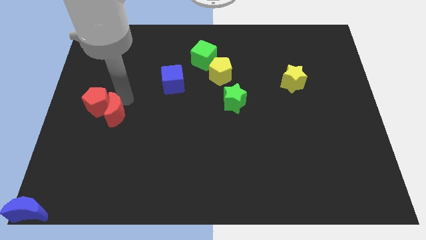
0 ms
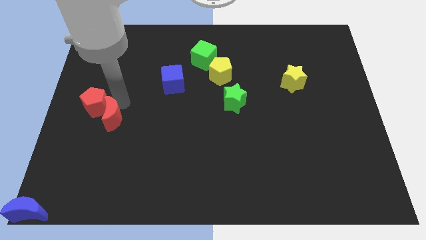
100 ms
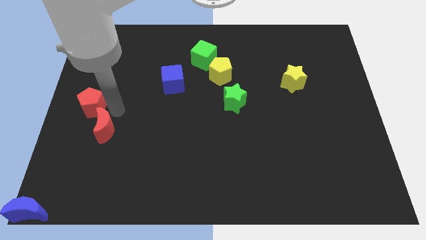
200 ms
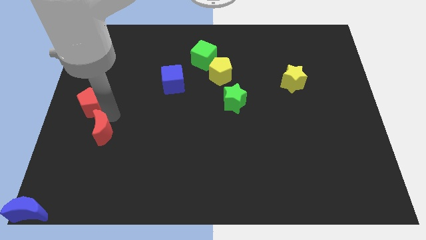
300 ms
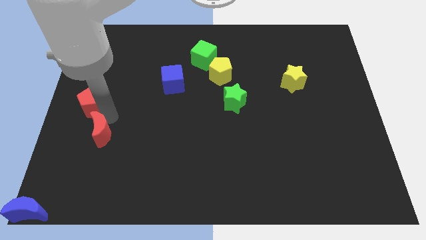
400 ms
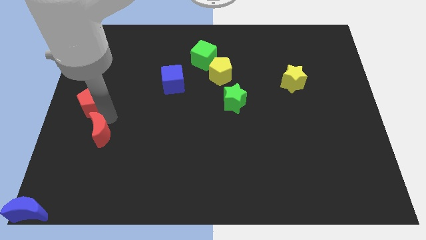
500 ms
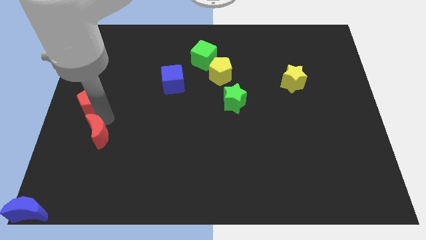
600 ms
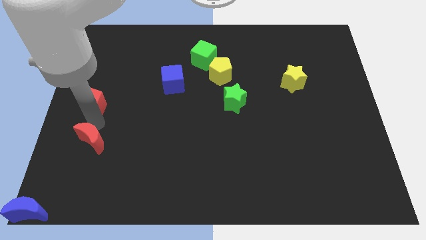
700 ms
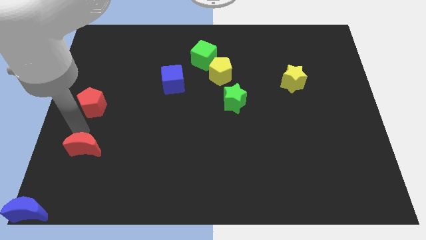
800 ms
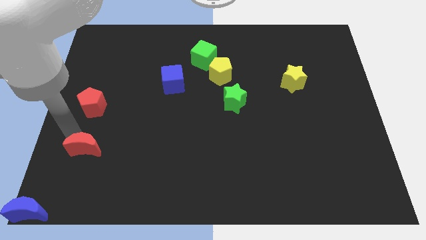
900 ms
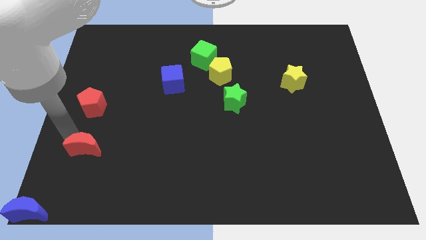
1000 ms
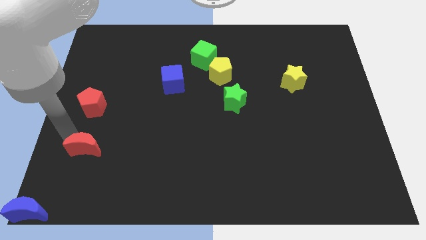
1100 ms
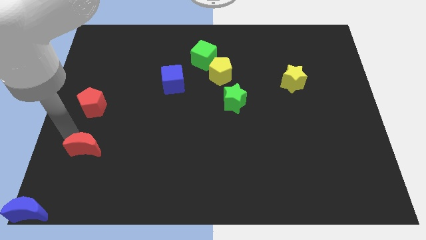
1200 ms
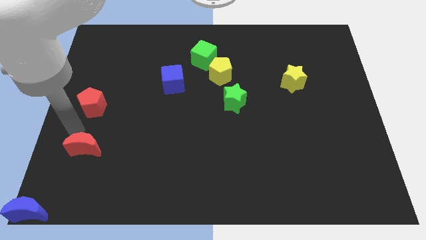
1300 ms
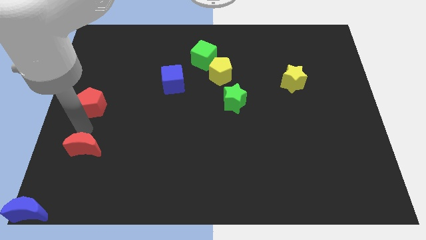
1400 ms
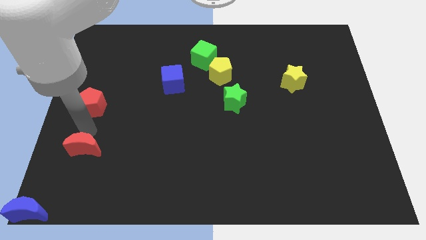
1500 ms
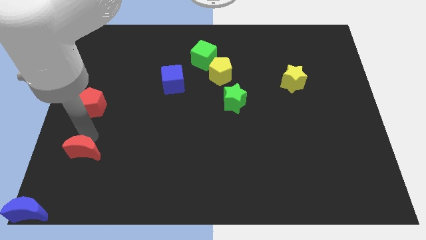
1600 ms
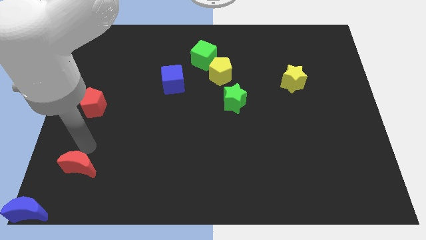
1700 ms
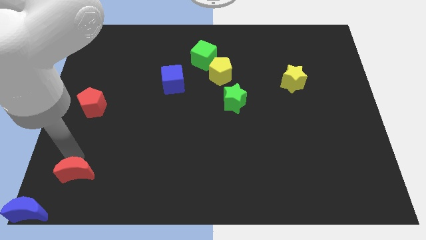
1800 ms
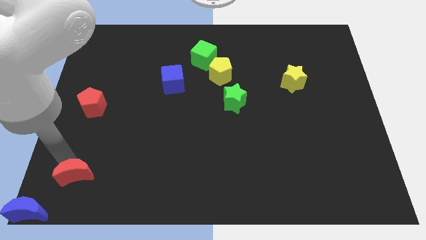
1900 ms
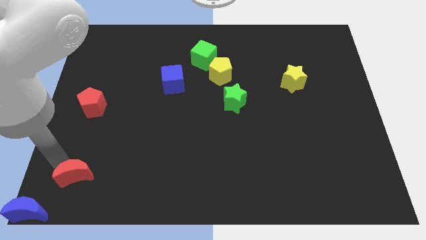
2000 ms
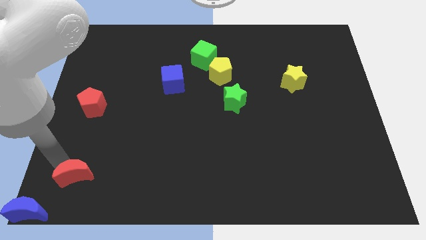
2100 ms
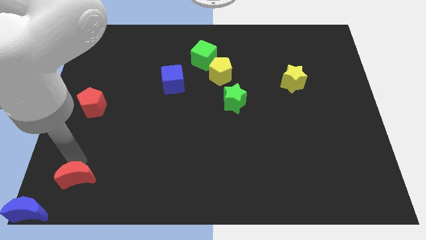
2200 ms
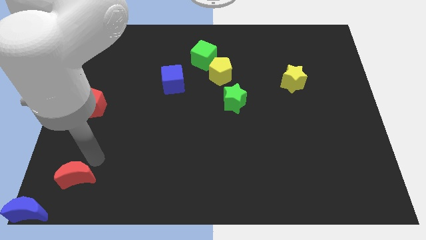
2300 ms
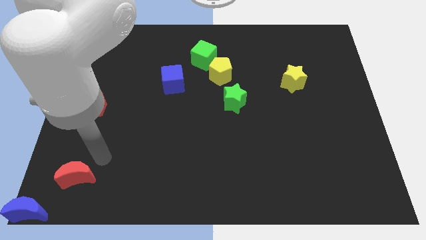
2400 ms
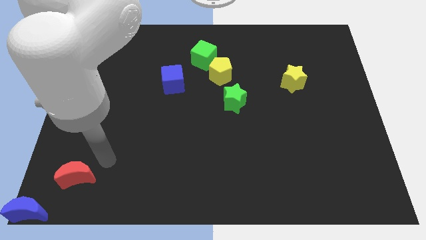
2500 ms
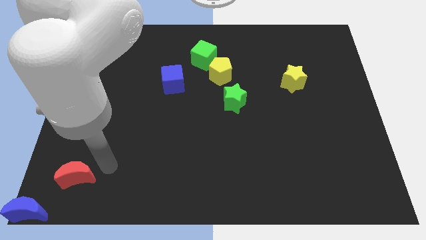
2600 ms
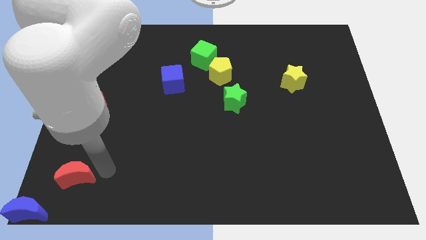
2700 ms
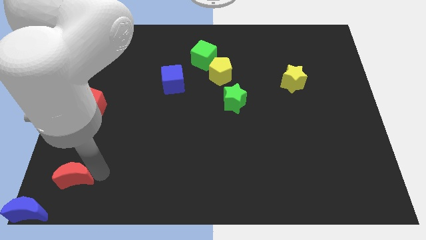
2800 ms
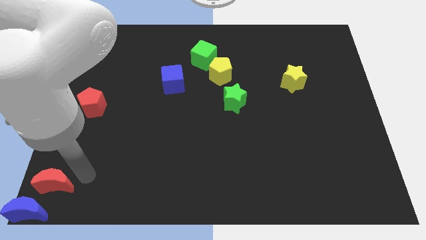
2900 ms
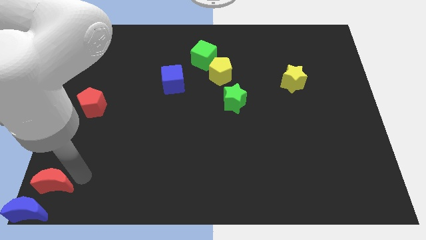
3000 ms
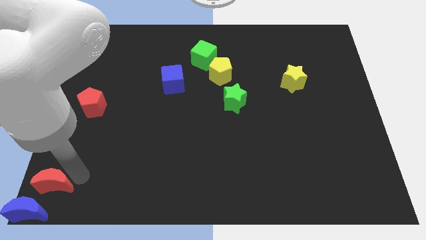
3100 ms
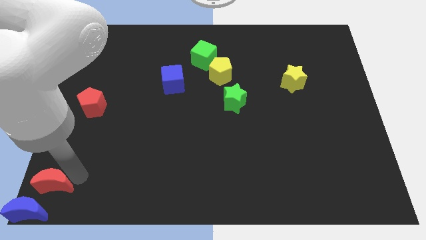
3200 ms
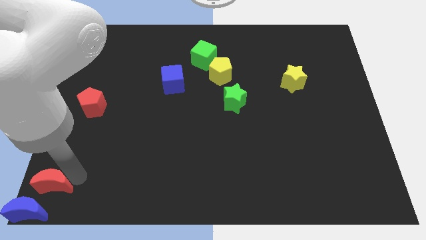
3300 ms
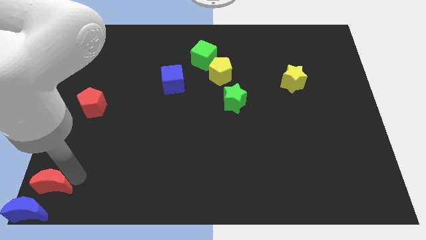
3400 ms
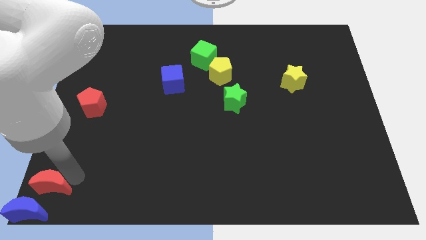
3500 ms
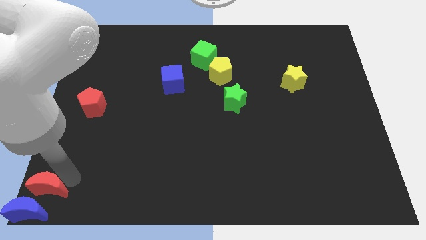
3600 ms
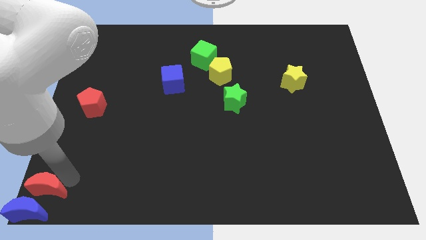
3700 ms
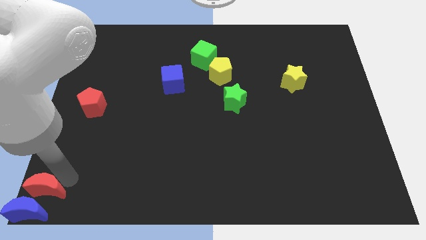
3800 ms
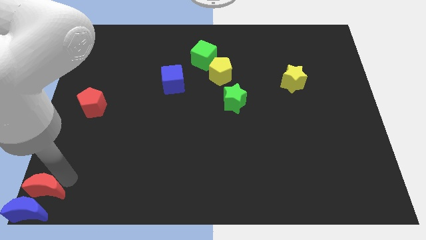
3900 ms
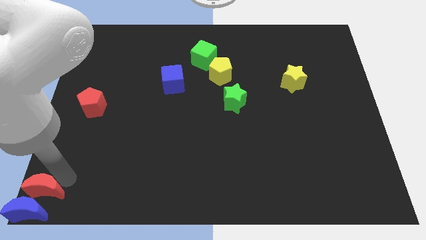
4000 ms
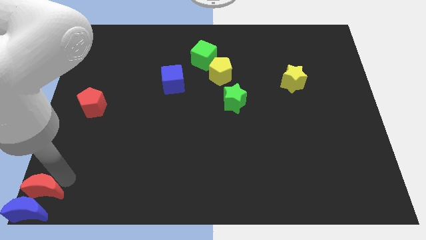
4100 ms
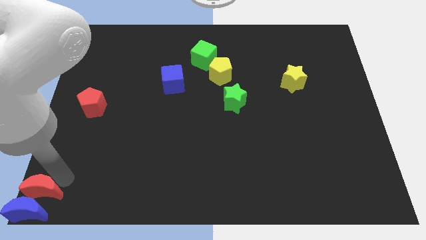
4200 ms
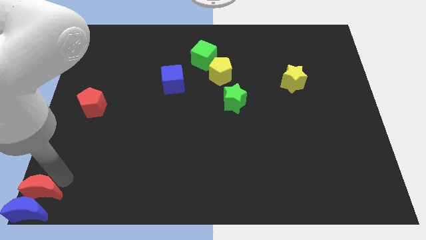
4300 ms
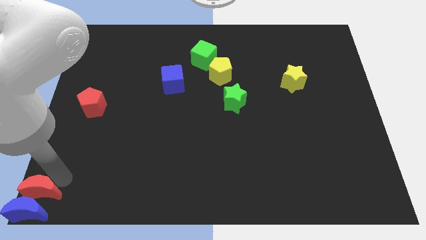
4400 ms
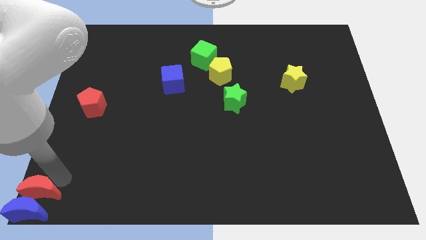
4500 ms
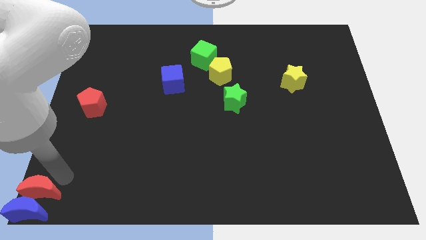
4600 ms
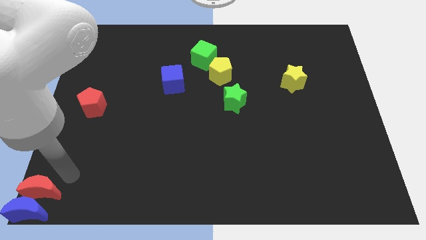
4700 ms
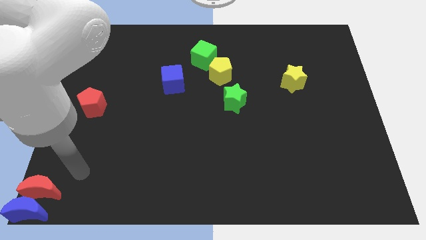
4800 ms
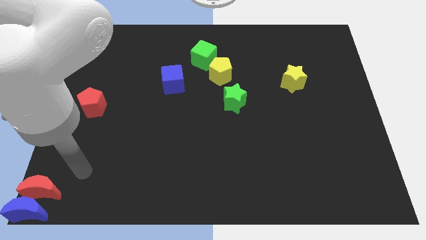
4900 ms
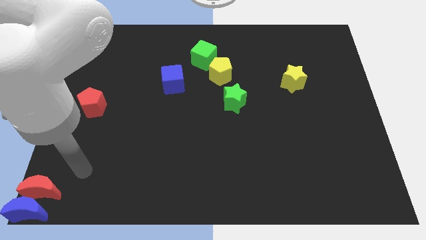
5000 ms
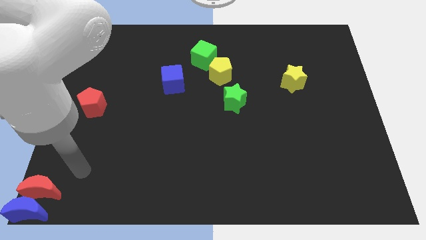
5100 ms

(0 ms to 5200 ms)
place the red moon above the blue moon

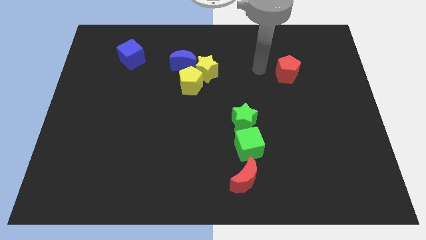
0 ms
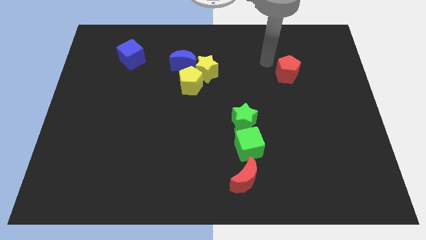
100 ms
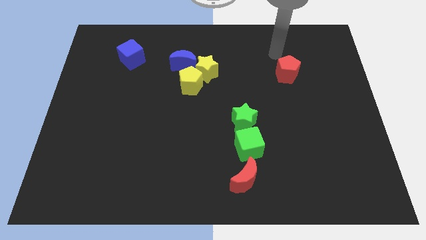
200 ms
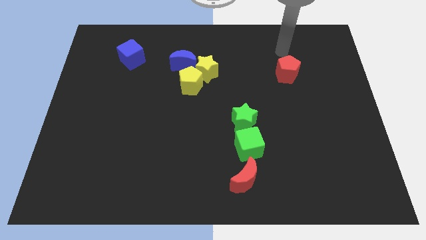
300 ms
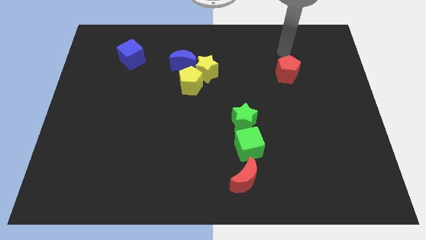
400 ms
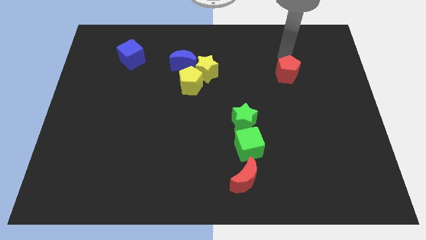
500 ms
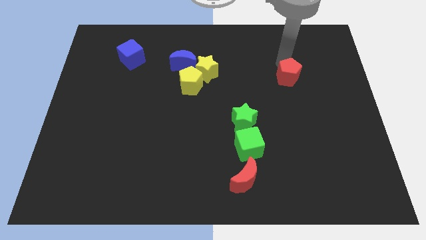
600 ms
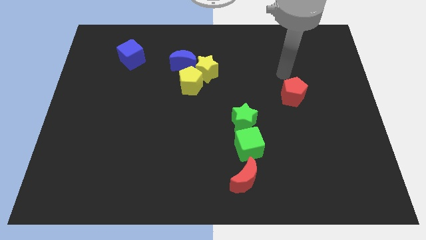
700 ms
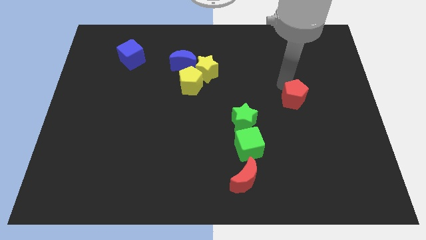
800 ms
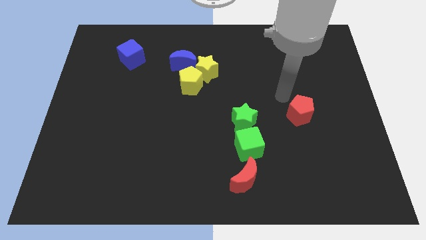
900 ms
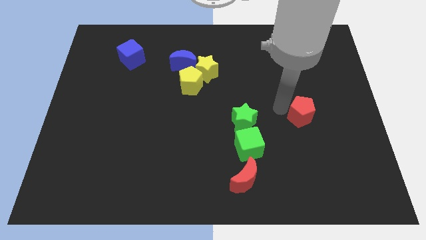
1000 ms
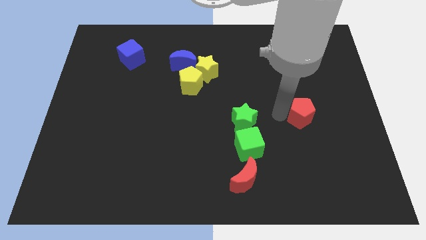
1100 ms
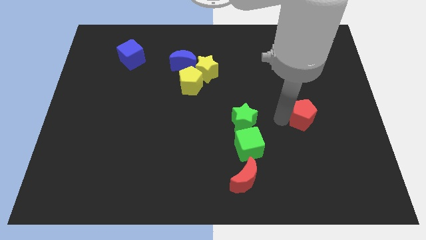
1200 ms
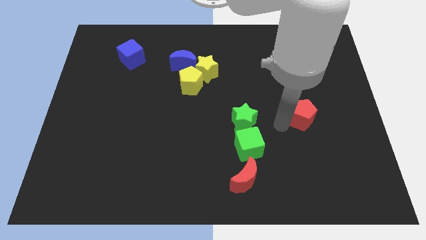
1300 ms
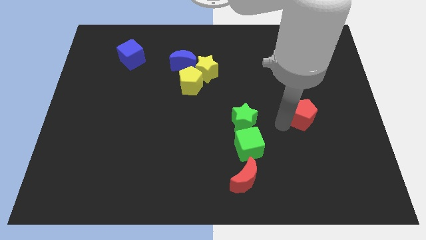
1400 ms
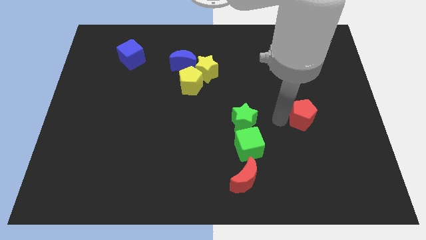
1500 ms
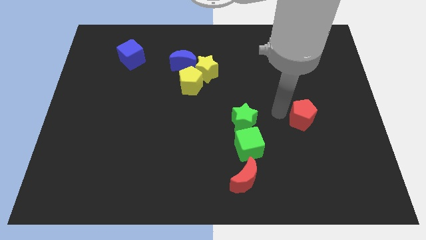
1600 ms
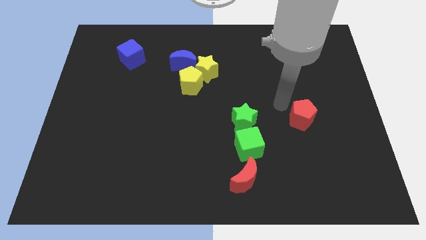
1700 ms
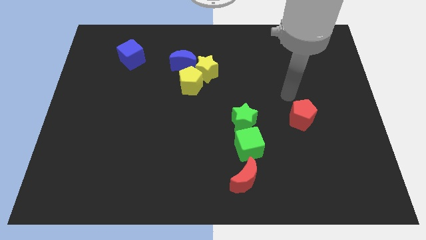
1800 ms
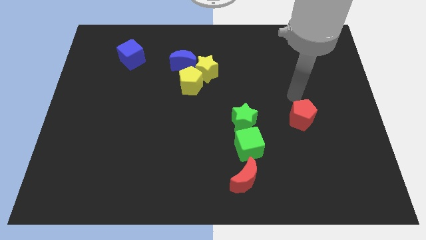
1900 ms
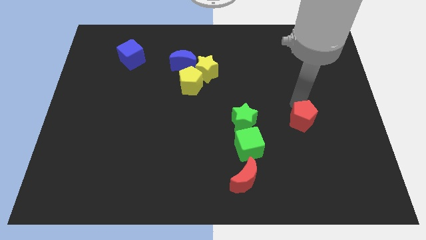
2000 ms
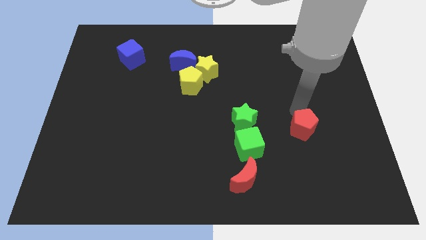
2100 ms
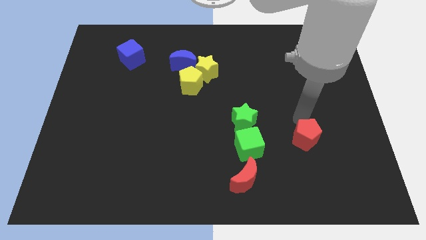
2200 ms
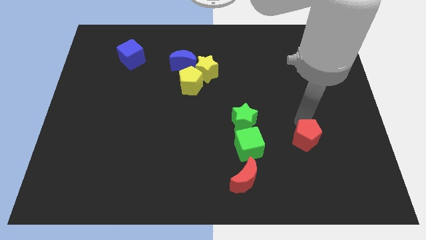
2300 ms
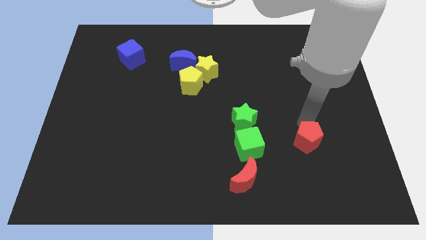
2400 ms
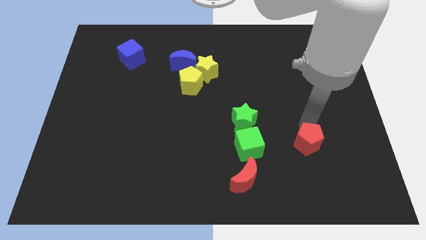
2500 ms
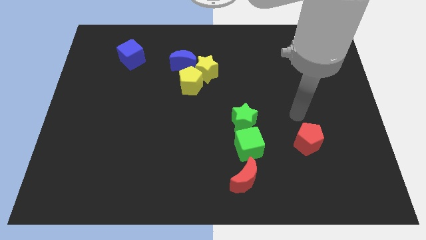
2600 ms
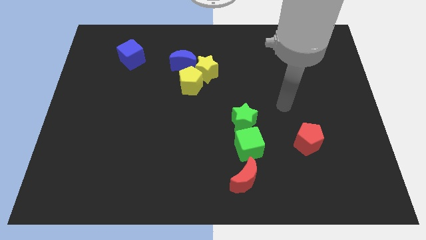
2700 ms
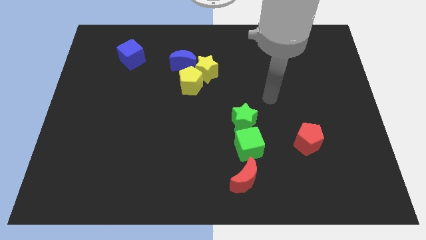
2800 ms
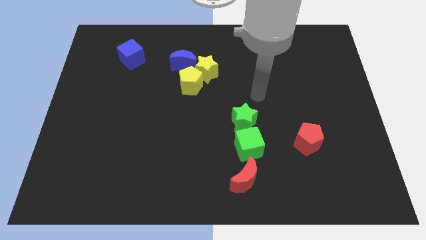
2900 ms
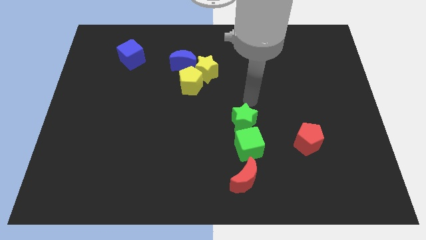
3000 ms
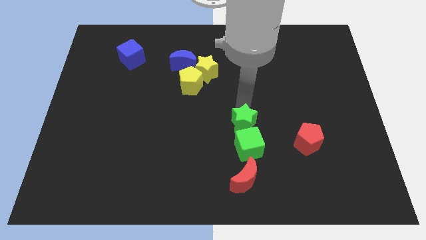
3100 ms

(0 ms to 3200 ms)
place the red pentagon to the right of the green cube

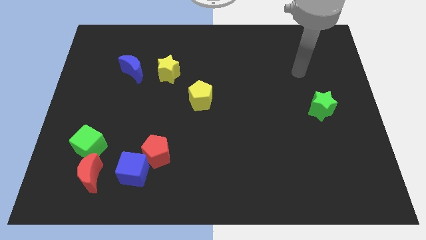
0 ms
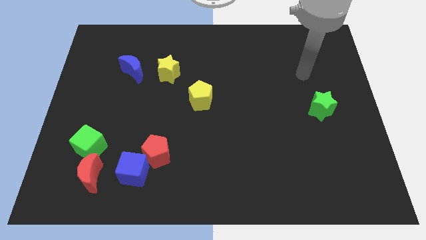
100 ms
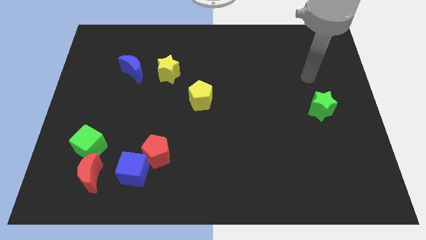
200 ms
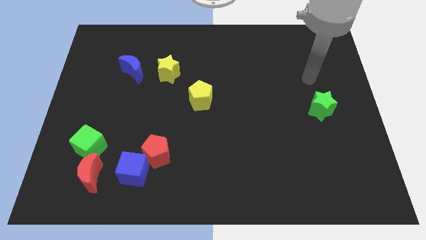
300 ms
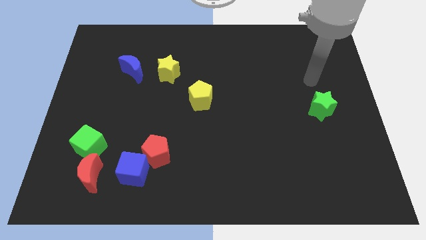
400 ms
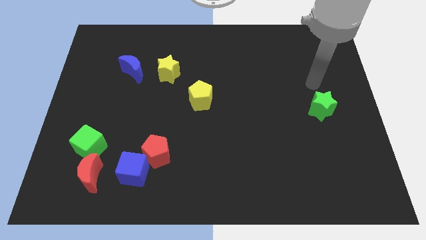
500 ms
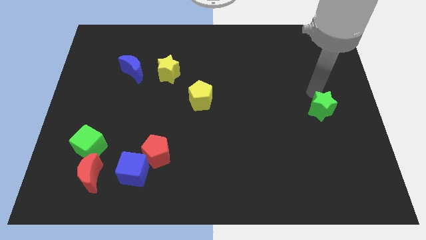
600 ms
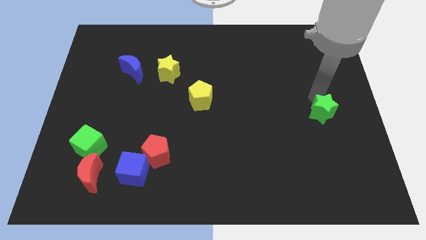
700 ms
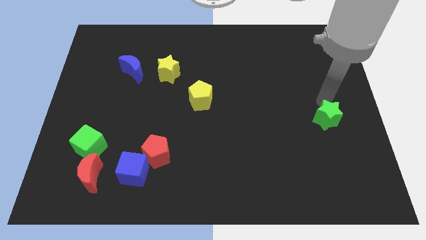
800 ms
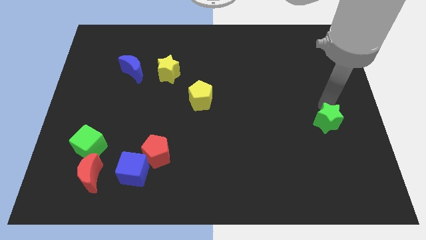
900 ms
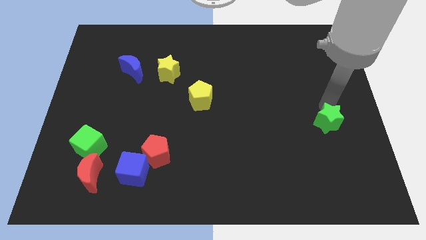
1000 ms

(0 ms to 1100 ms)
move the green star slightly down
